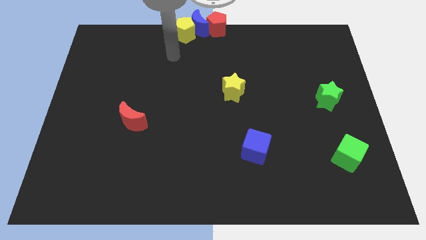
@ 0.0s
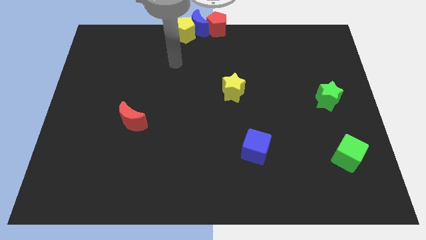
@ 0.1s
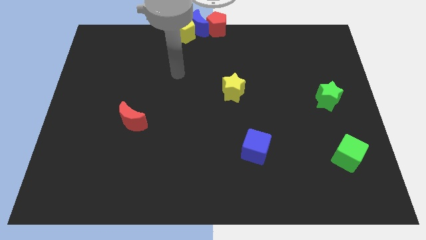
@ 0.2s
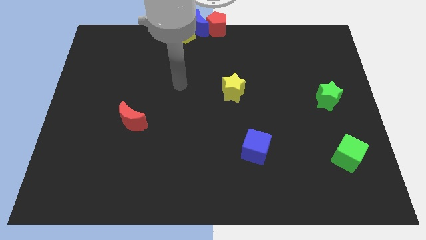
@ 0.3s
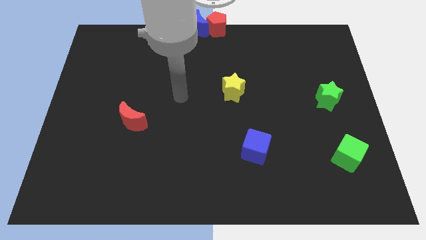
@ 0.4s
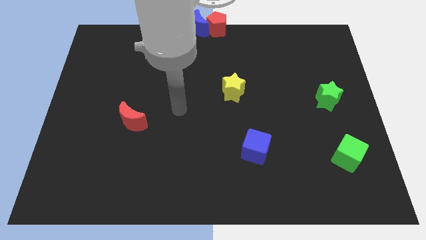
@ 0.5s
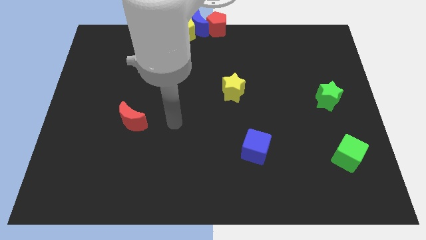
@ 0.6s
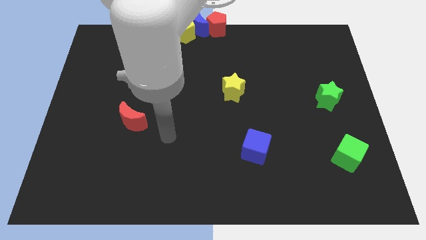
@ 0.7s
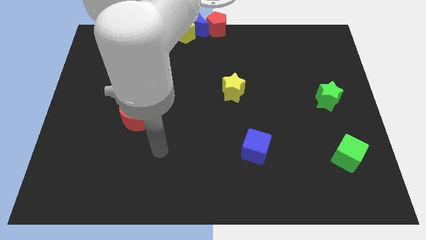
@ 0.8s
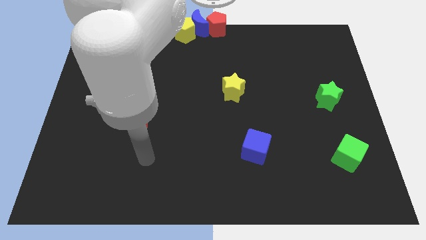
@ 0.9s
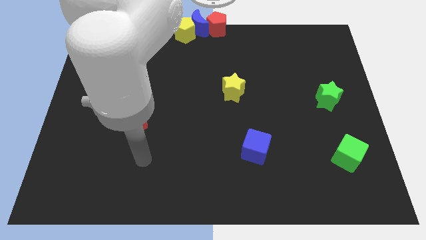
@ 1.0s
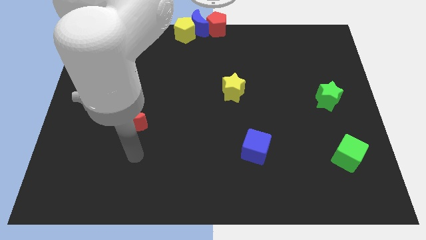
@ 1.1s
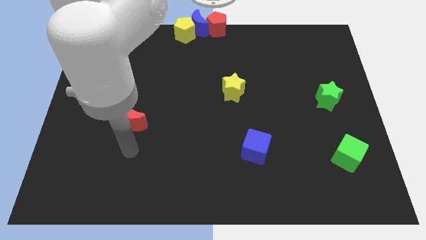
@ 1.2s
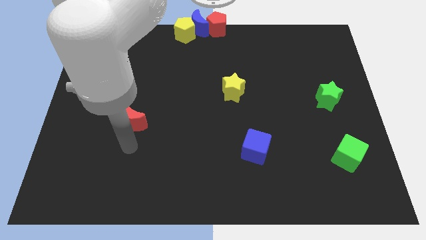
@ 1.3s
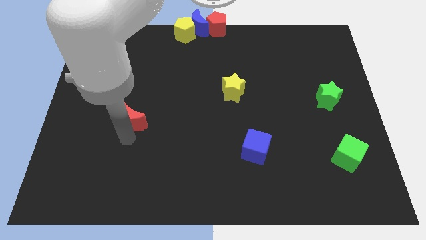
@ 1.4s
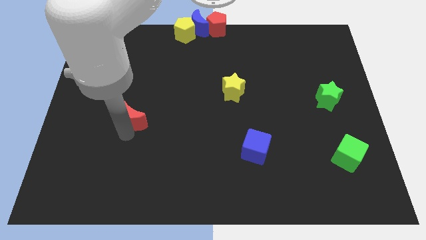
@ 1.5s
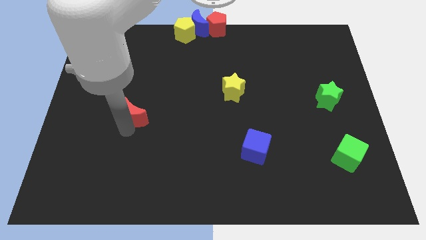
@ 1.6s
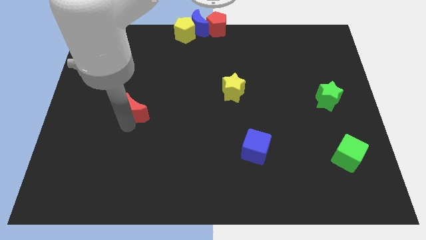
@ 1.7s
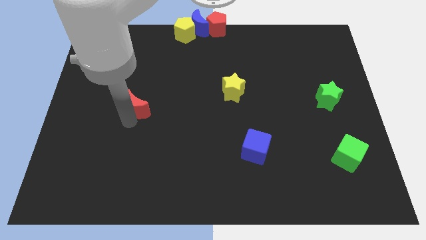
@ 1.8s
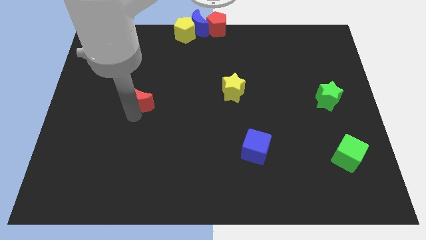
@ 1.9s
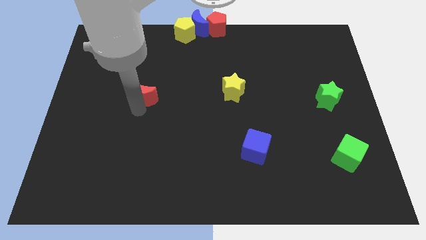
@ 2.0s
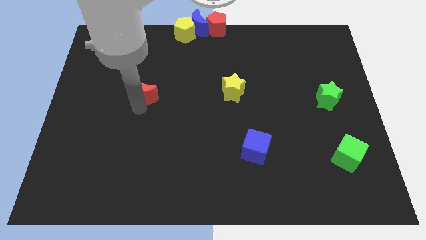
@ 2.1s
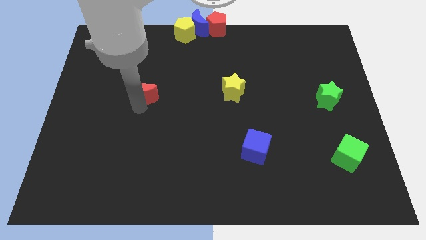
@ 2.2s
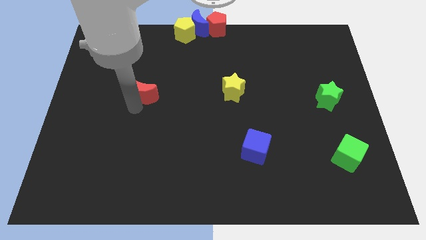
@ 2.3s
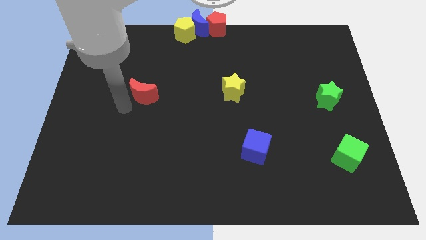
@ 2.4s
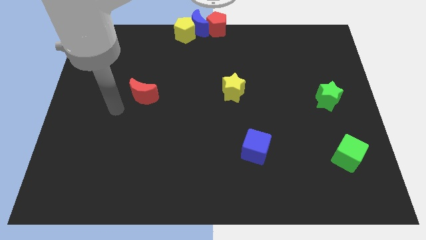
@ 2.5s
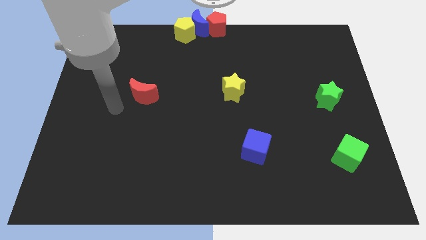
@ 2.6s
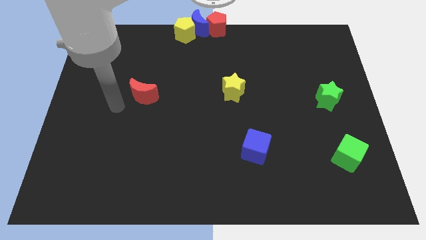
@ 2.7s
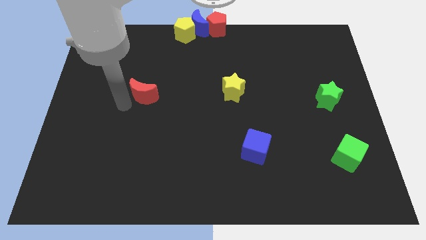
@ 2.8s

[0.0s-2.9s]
move red crescent to the center

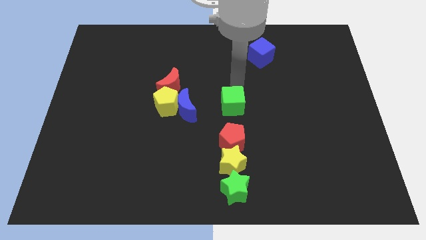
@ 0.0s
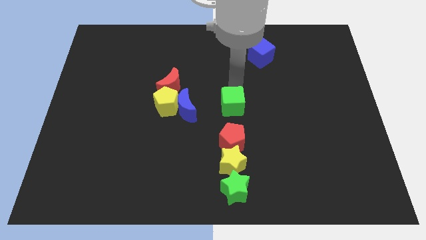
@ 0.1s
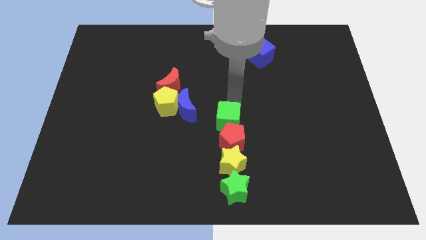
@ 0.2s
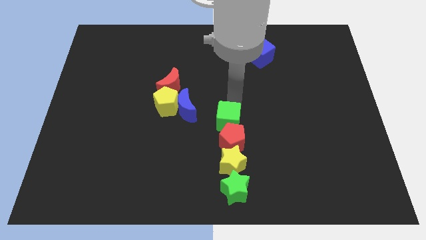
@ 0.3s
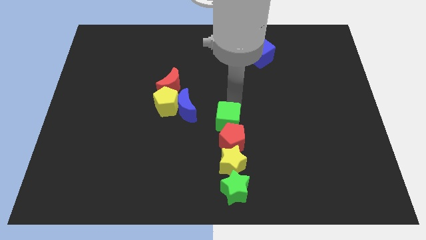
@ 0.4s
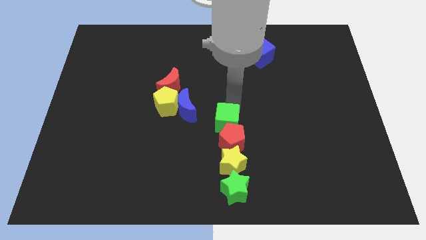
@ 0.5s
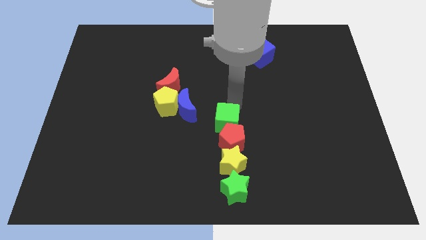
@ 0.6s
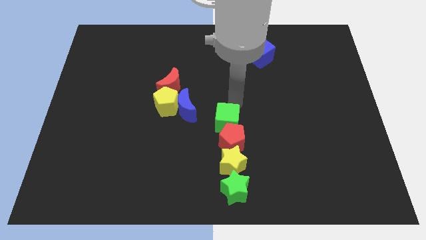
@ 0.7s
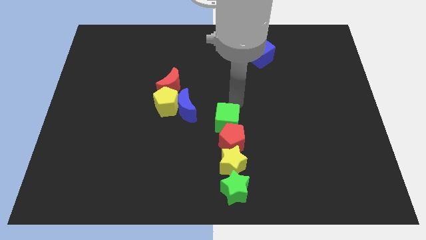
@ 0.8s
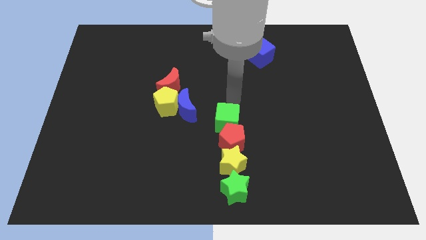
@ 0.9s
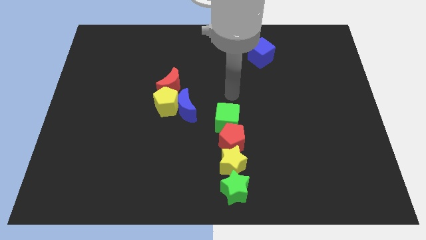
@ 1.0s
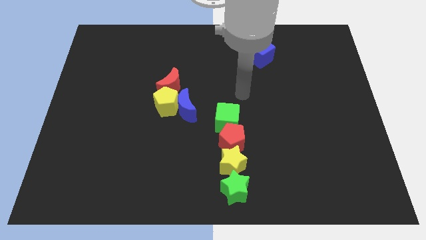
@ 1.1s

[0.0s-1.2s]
push green cube into red pentagon

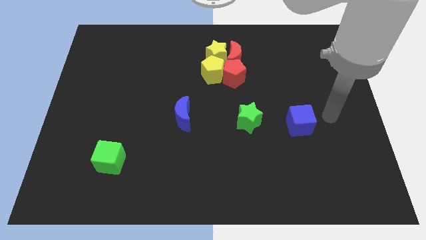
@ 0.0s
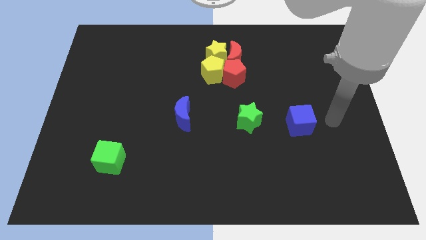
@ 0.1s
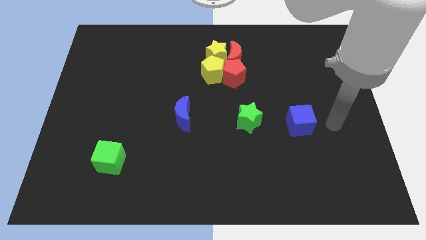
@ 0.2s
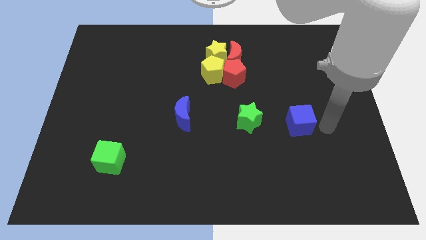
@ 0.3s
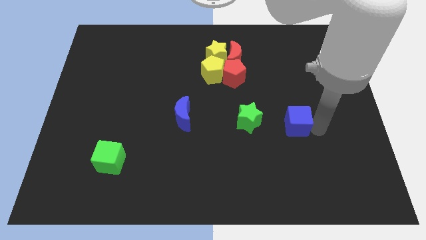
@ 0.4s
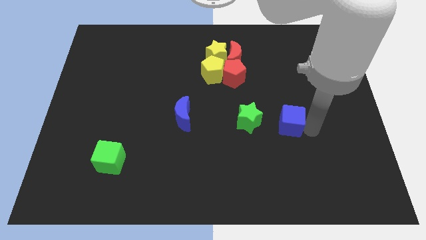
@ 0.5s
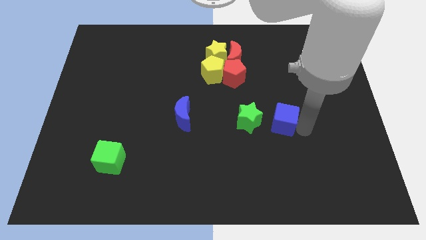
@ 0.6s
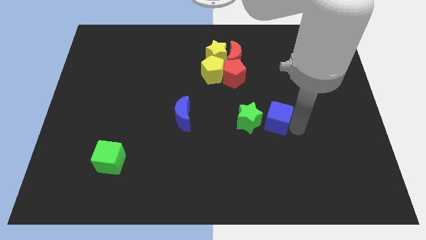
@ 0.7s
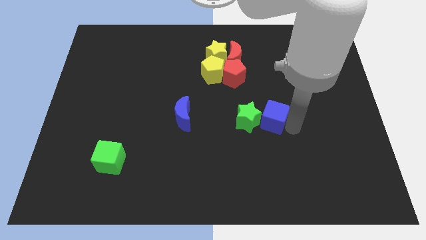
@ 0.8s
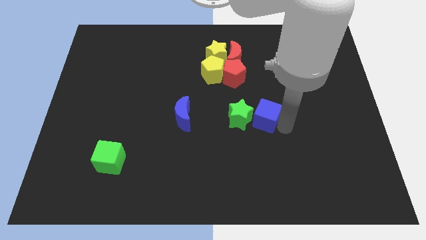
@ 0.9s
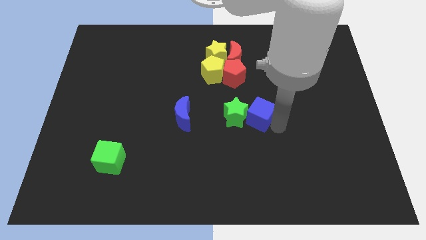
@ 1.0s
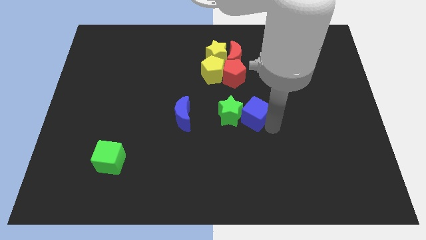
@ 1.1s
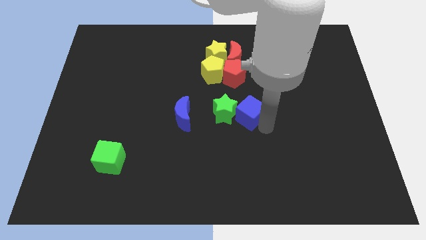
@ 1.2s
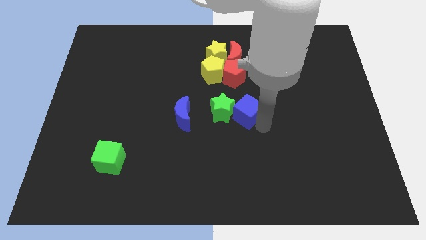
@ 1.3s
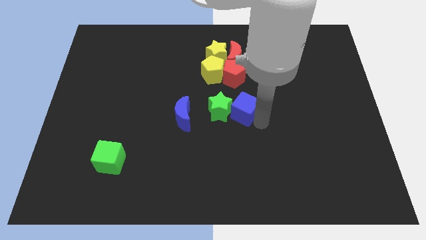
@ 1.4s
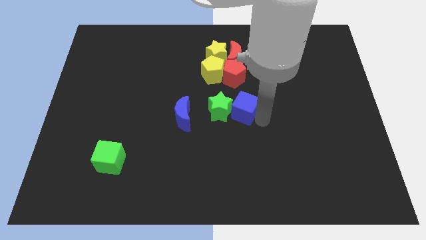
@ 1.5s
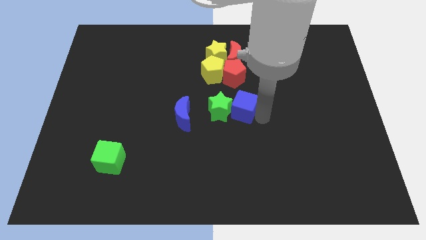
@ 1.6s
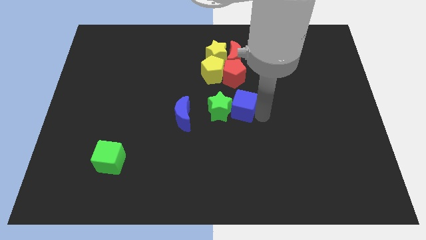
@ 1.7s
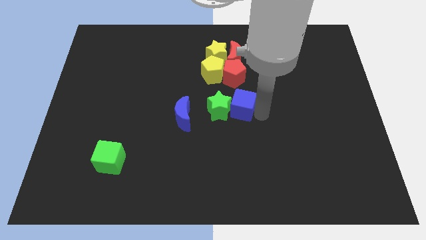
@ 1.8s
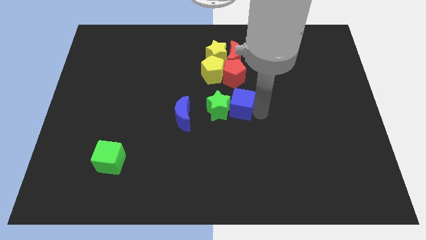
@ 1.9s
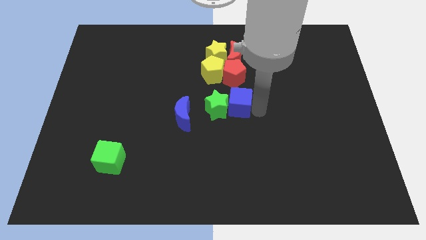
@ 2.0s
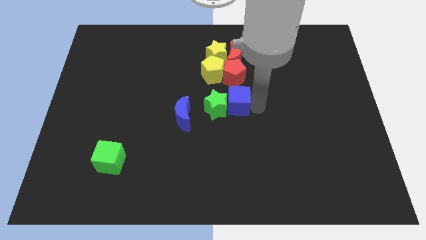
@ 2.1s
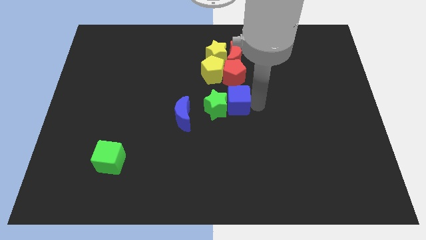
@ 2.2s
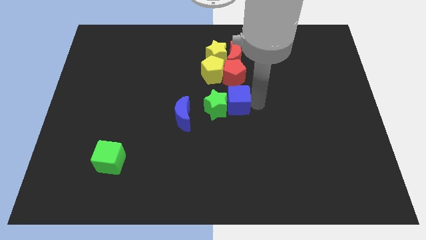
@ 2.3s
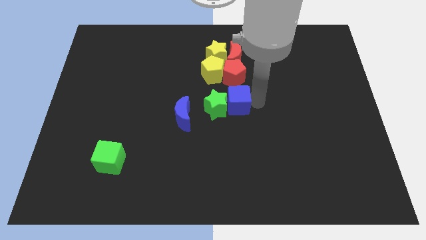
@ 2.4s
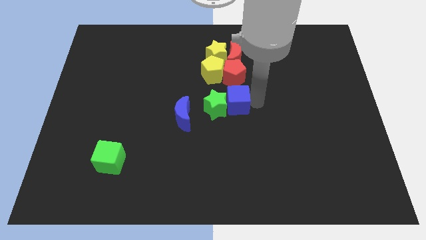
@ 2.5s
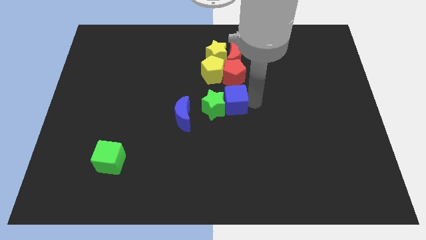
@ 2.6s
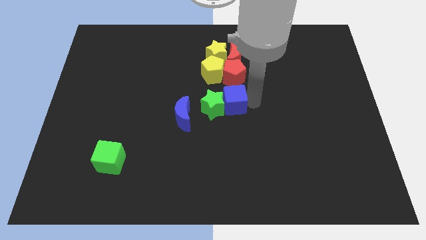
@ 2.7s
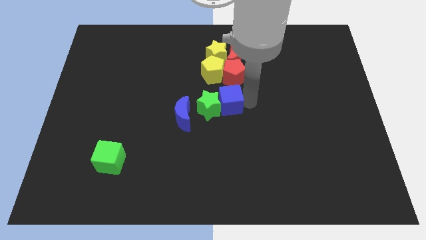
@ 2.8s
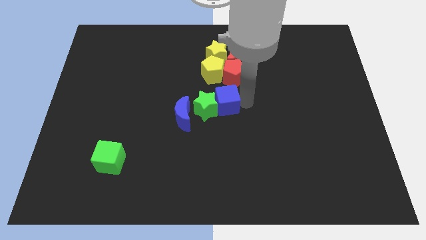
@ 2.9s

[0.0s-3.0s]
push the green star in between the blue blocks

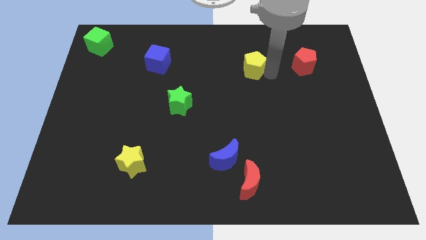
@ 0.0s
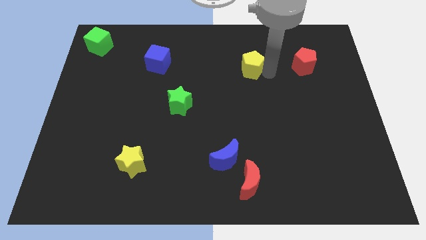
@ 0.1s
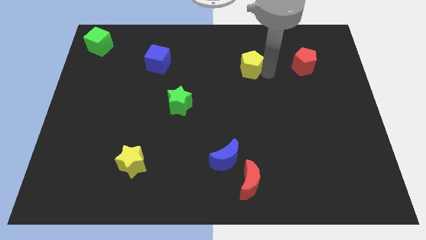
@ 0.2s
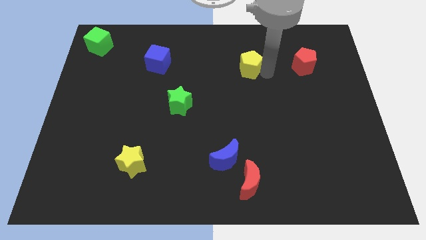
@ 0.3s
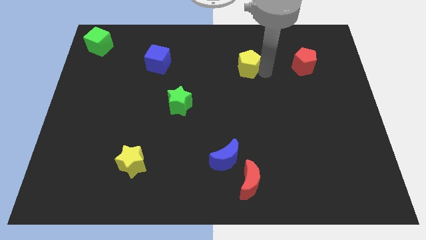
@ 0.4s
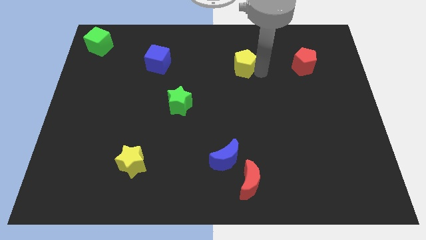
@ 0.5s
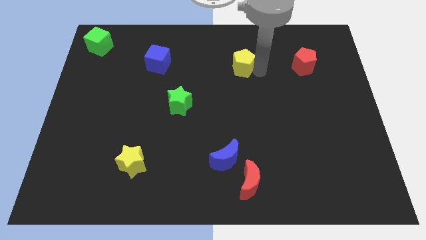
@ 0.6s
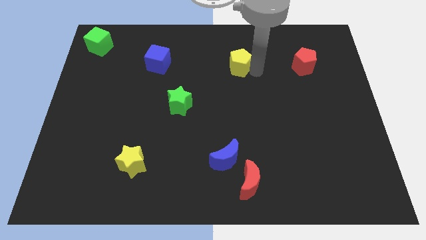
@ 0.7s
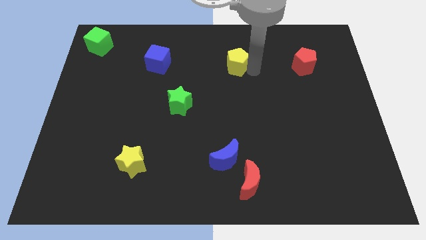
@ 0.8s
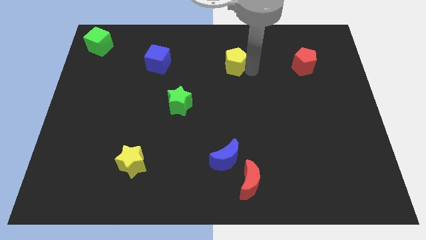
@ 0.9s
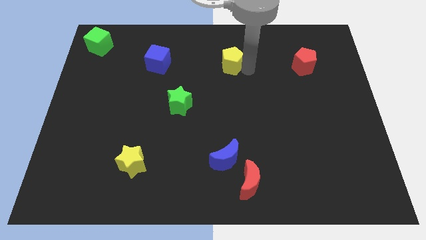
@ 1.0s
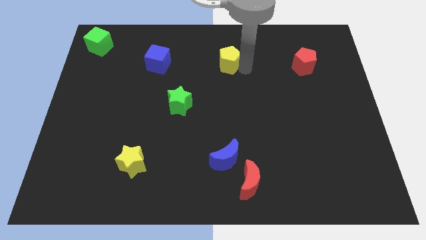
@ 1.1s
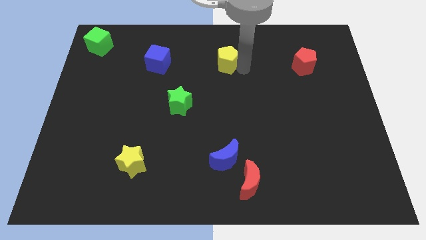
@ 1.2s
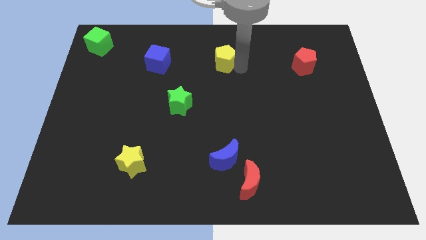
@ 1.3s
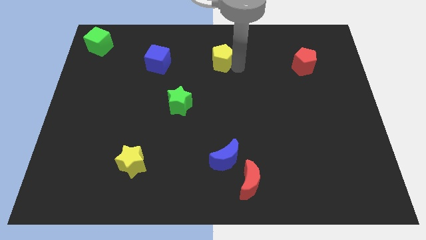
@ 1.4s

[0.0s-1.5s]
place yellow pentagon in between red pentagon and blue cube

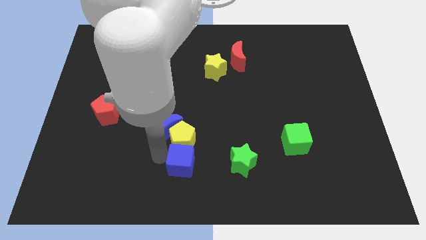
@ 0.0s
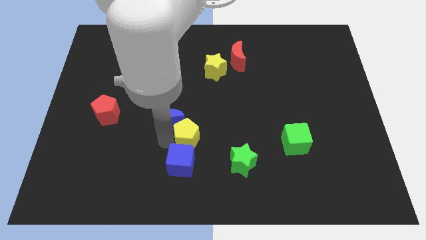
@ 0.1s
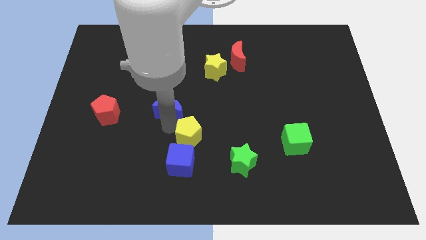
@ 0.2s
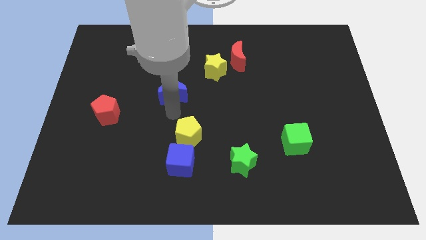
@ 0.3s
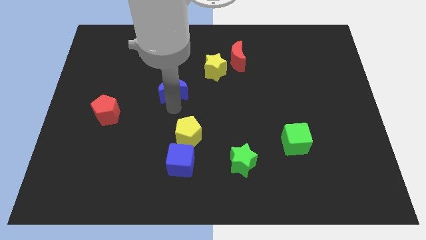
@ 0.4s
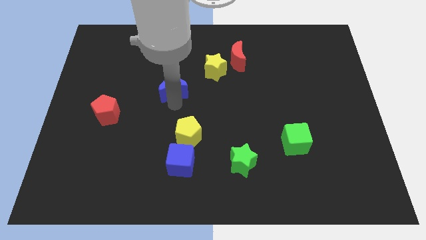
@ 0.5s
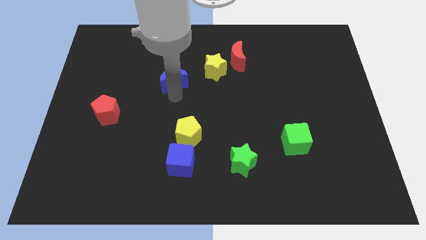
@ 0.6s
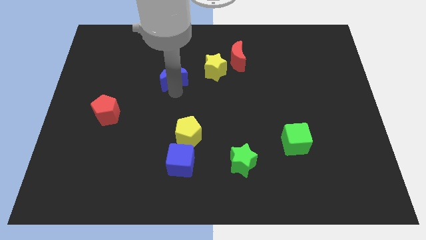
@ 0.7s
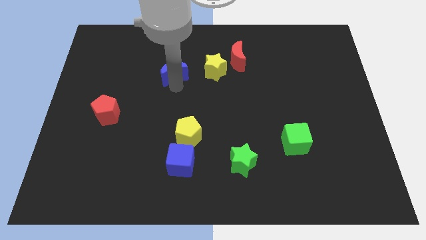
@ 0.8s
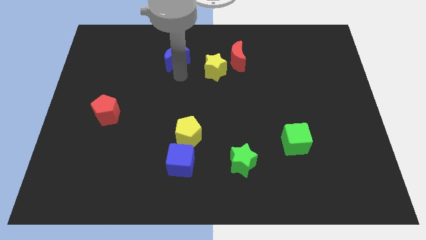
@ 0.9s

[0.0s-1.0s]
move the blue crescent left to the yellow star
